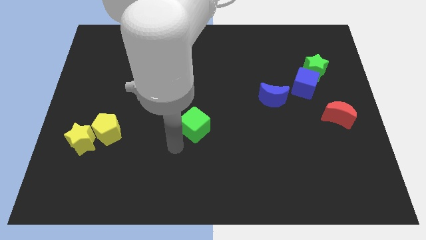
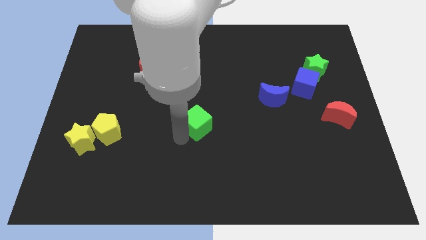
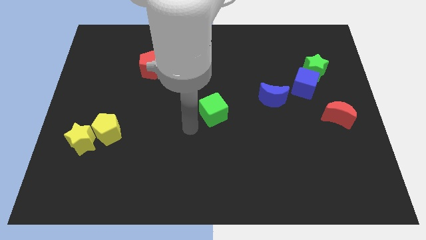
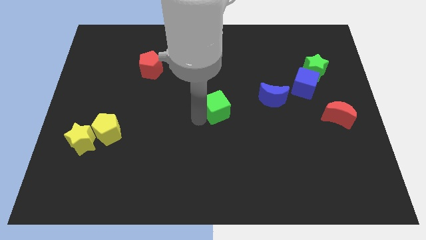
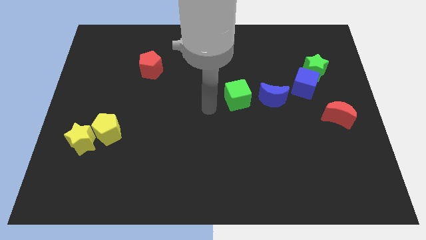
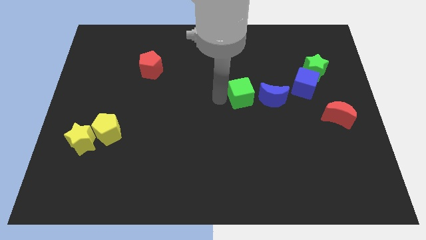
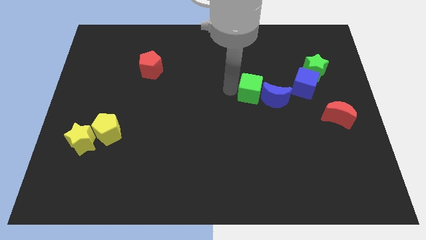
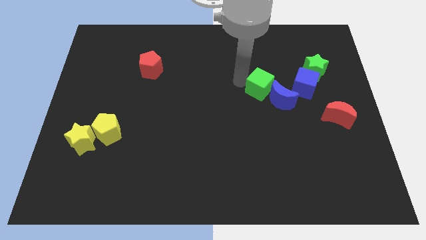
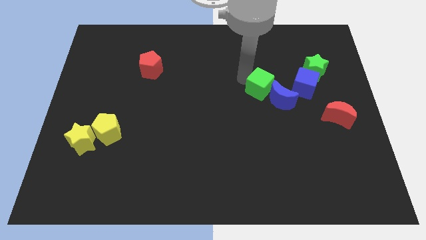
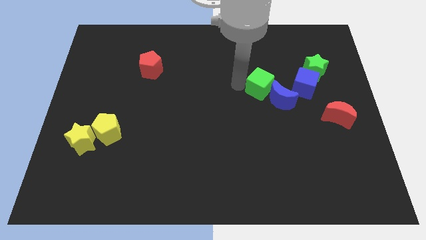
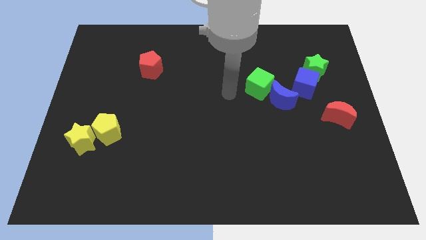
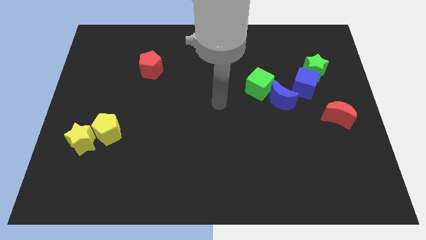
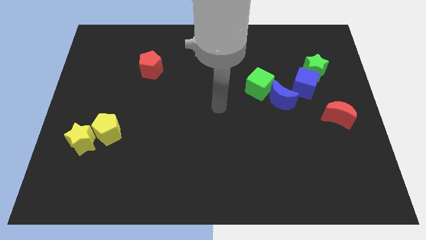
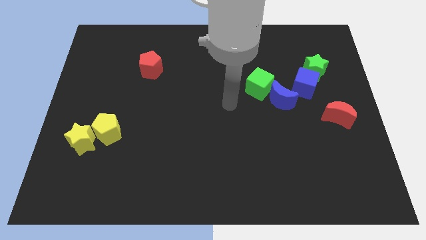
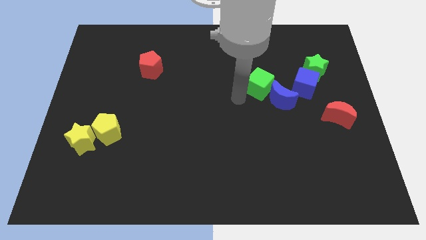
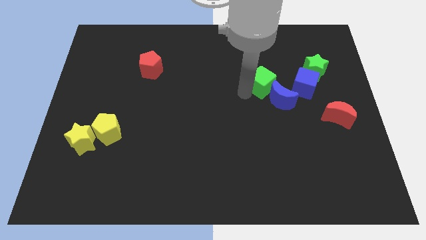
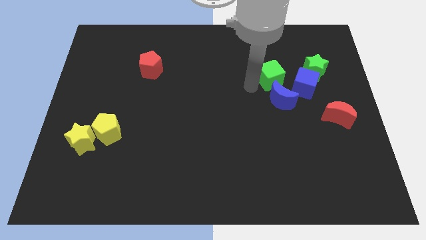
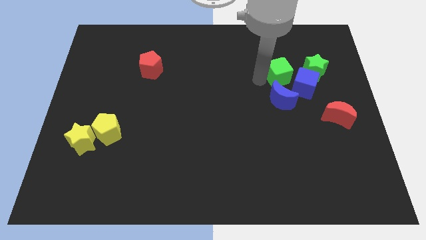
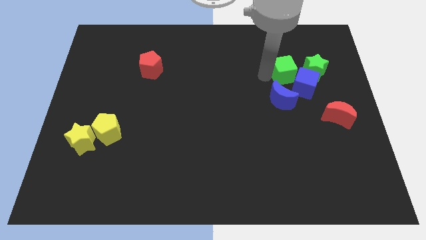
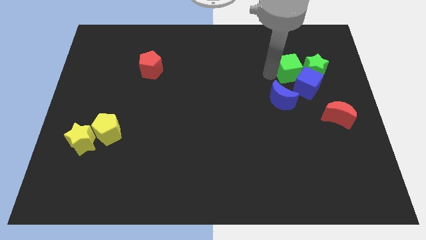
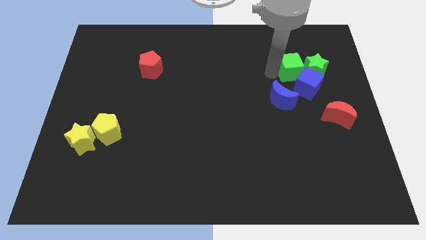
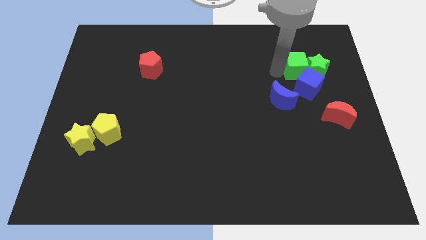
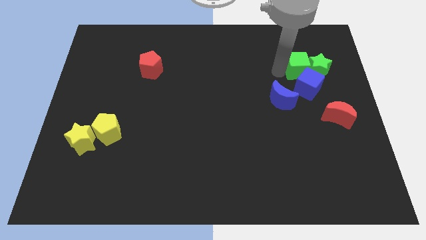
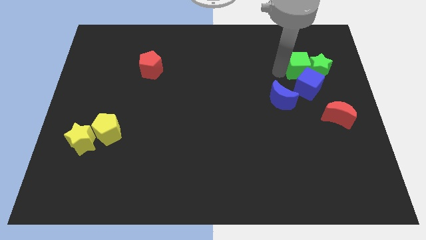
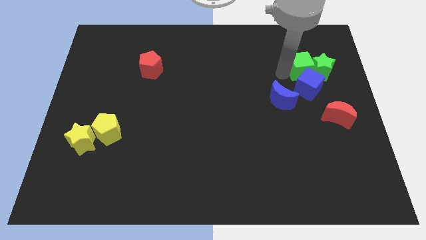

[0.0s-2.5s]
push the green cube to the top of the blue cube

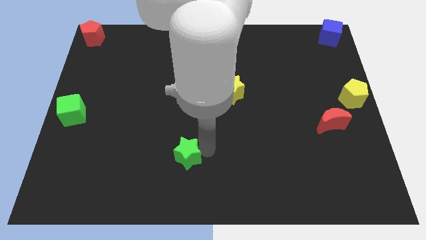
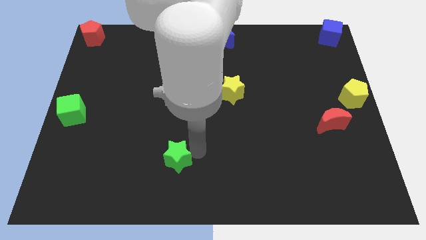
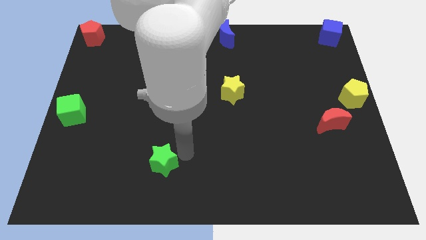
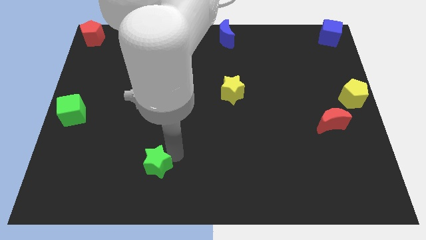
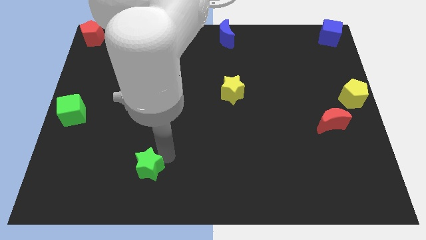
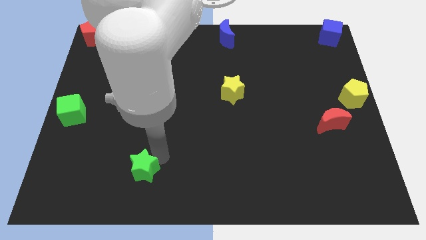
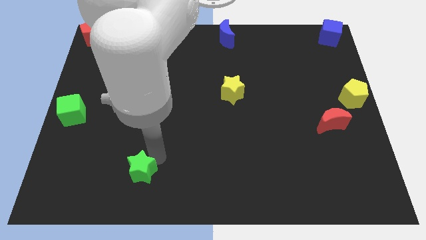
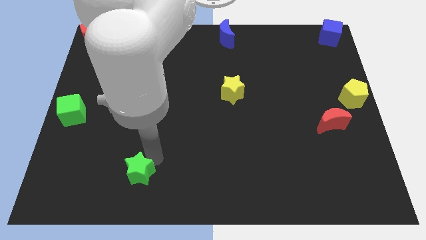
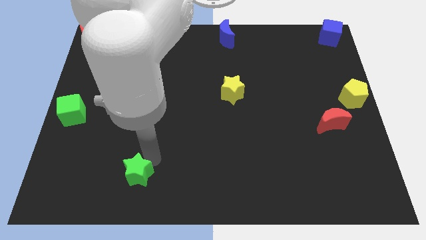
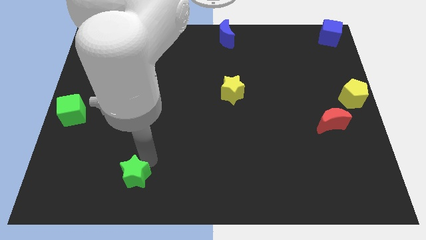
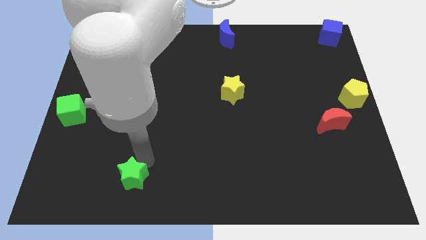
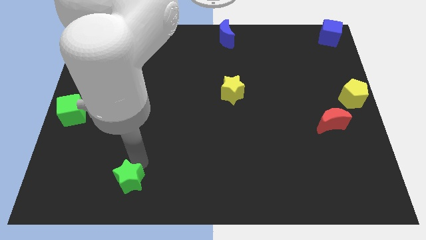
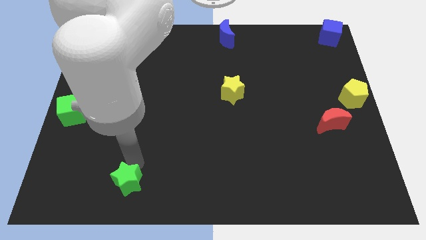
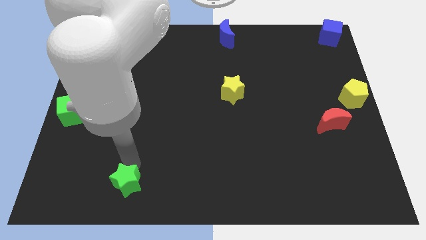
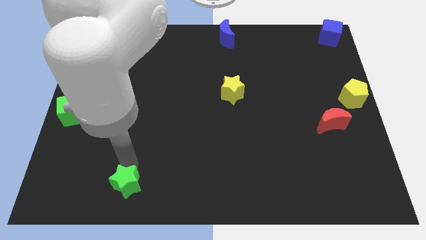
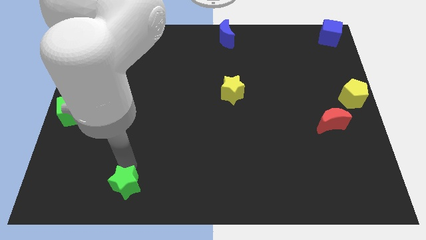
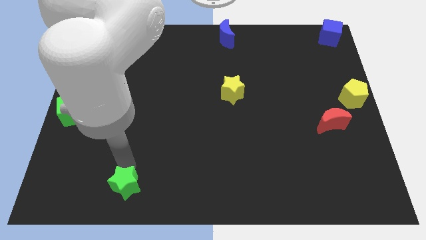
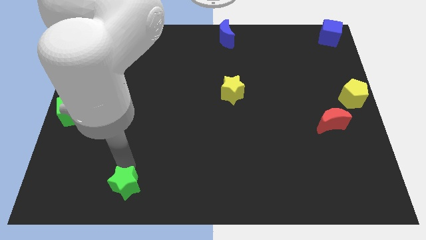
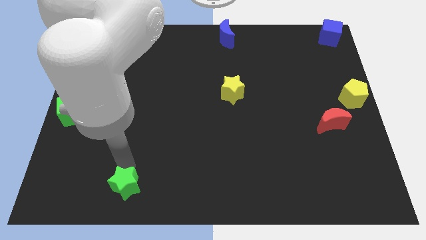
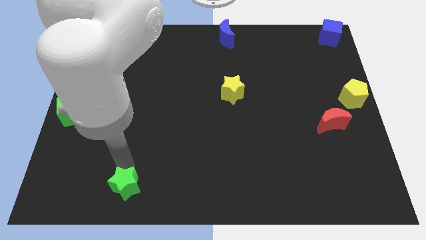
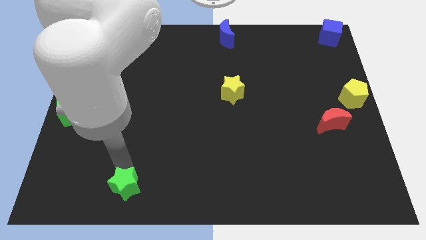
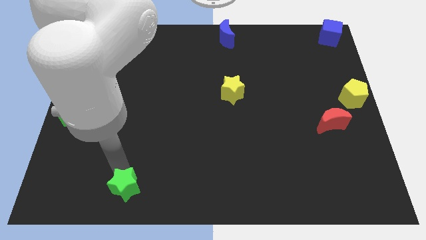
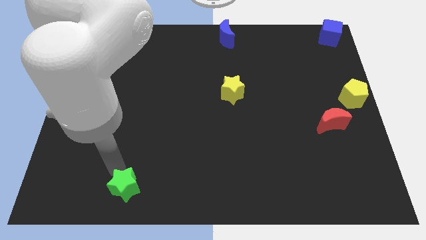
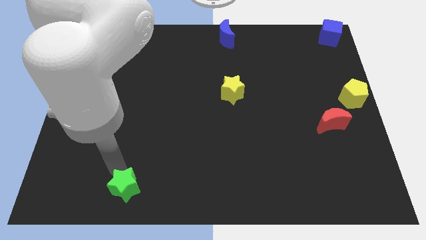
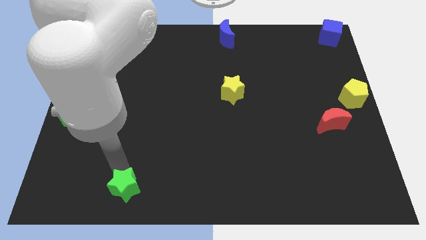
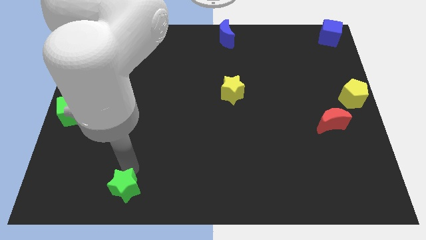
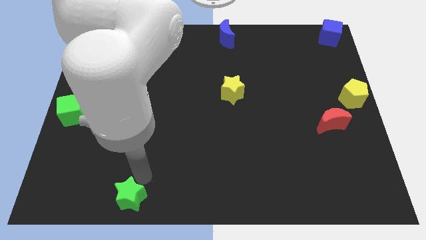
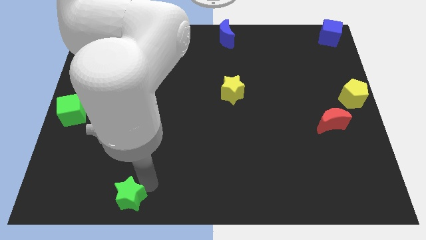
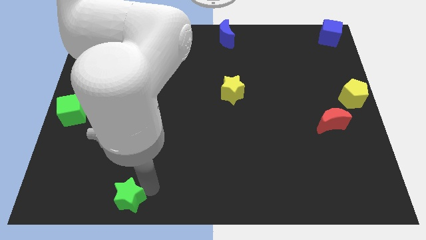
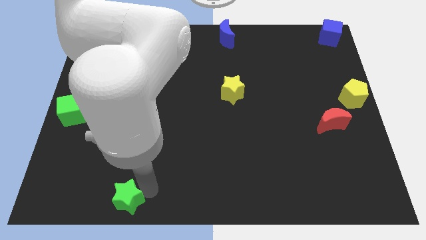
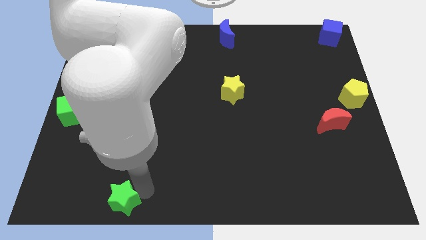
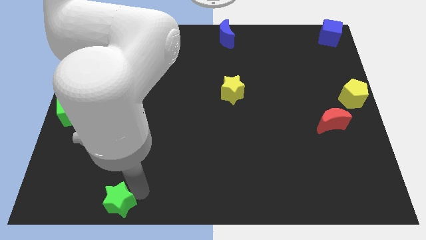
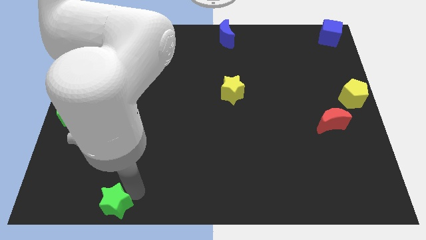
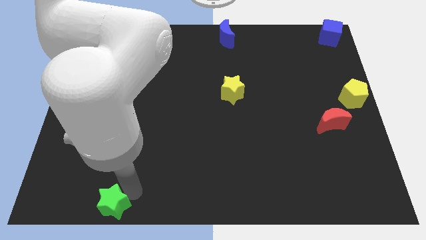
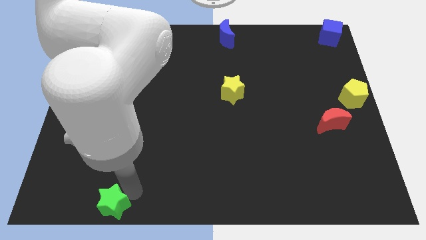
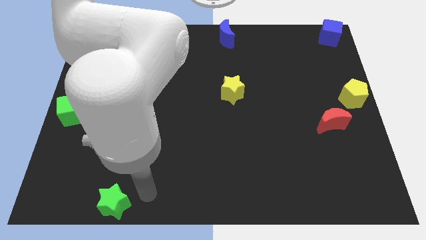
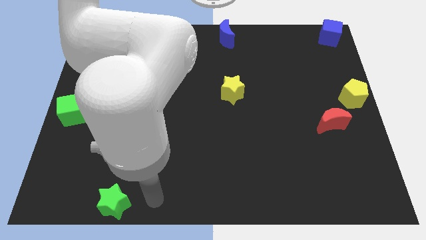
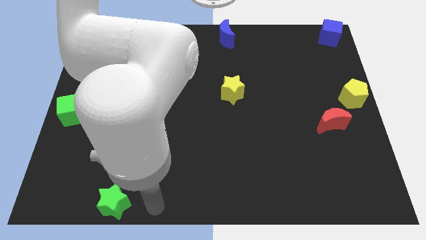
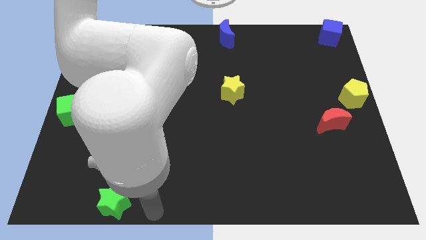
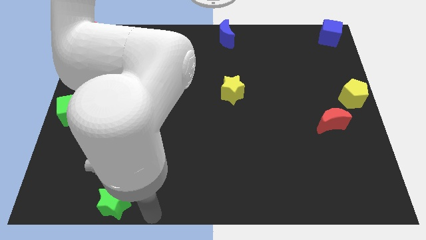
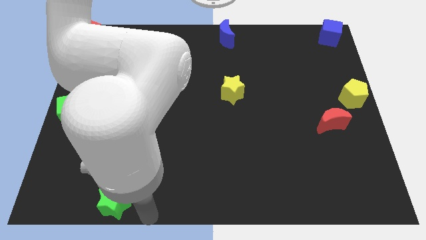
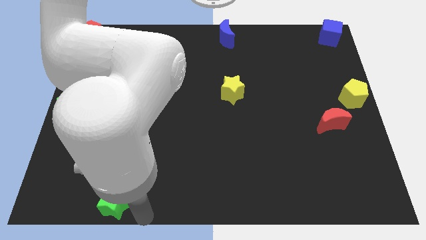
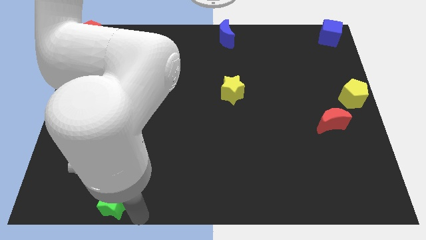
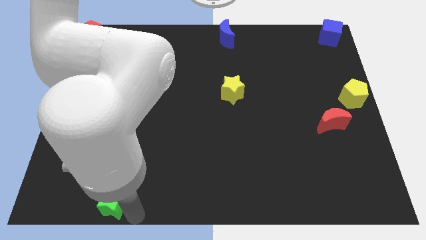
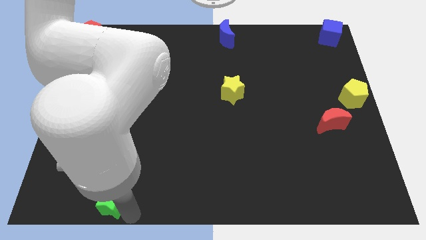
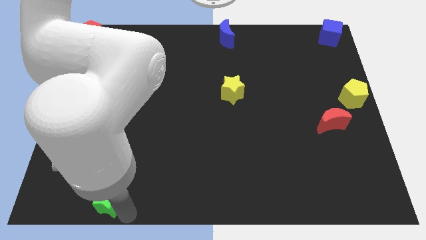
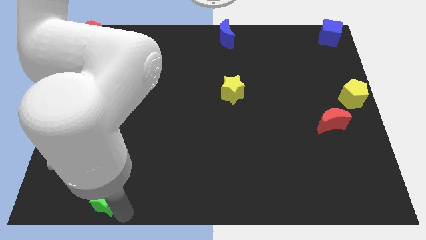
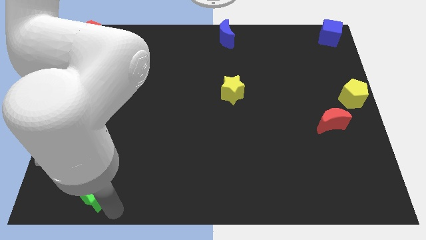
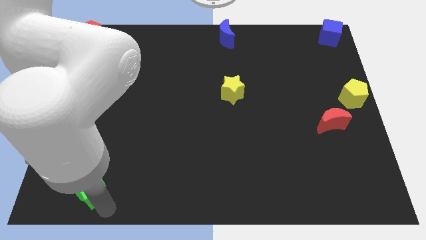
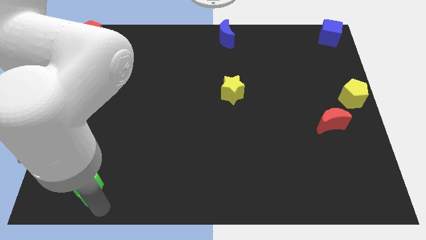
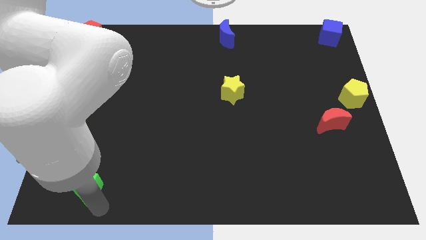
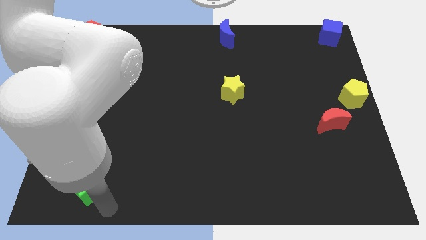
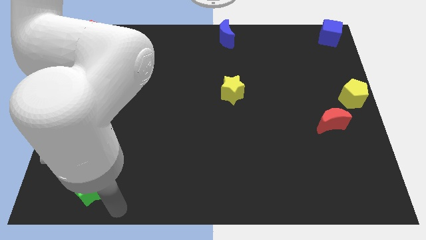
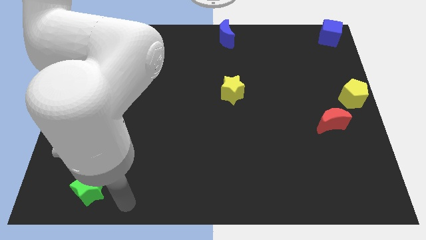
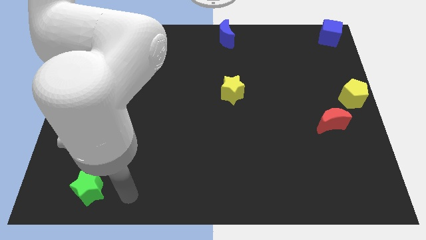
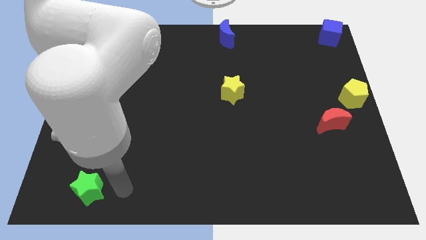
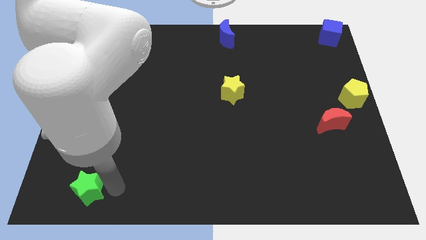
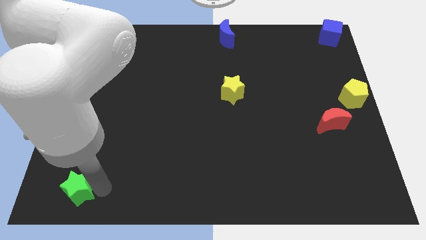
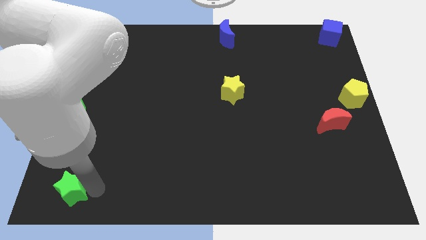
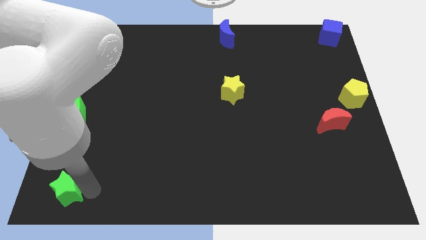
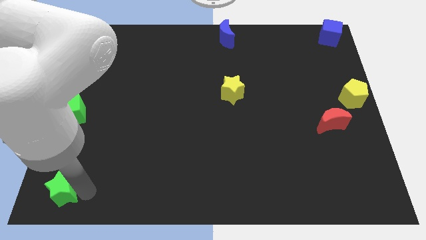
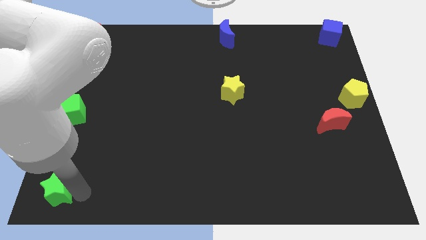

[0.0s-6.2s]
move the green star to the left bottom of the board

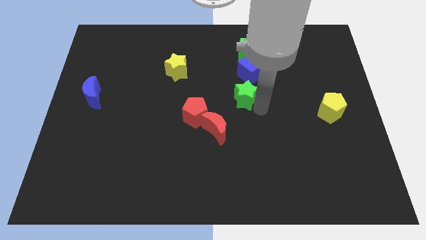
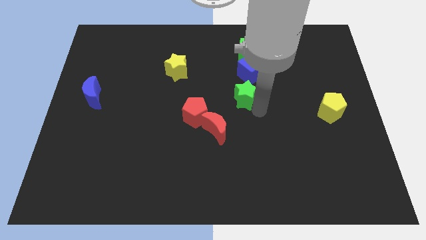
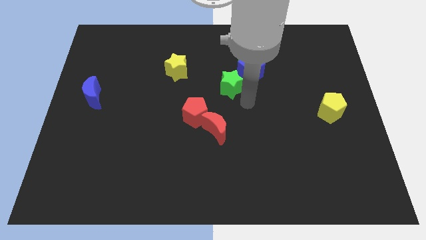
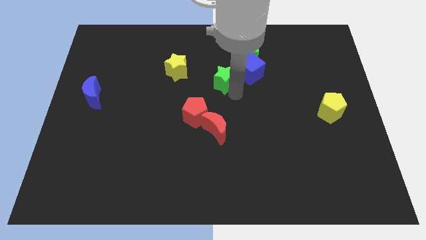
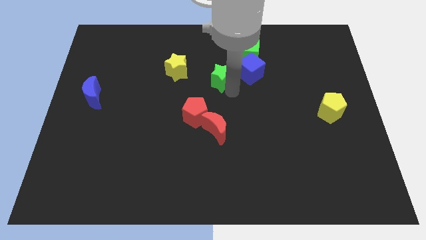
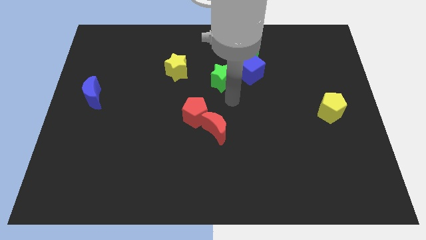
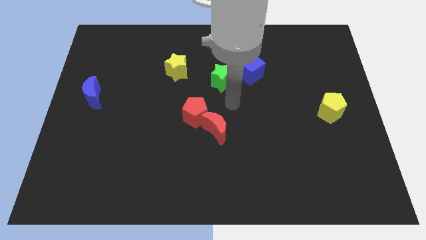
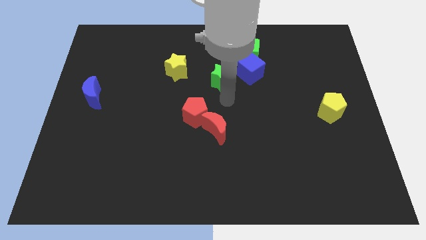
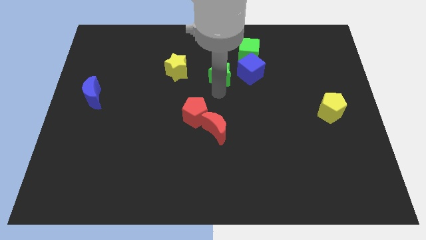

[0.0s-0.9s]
move the green star left to the blue cube
